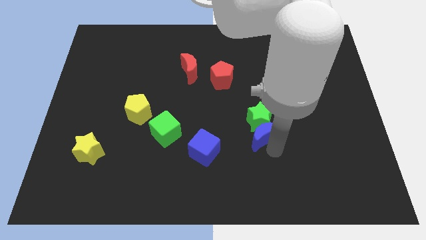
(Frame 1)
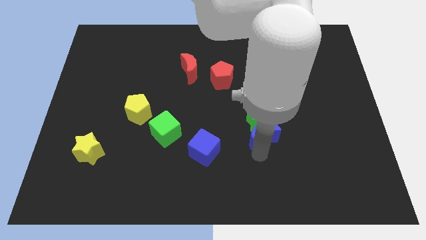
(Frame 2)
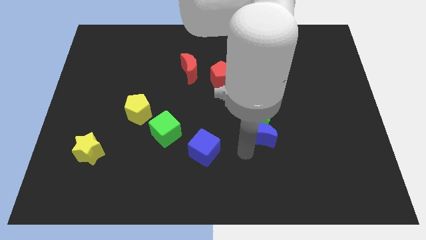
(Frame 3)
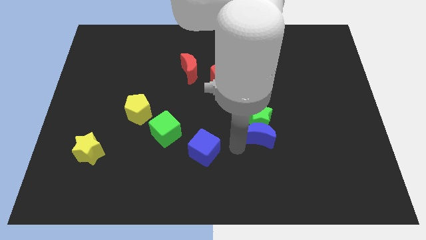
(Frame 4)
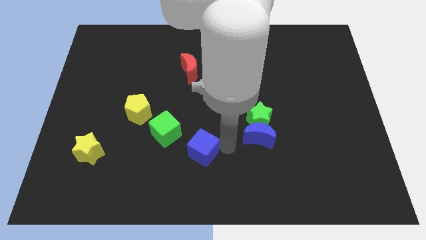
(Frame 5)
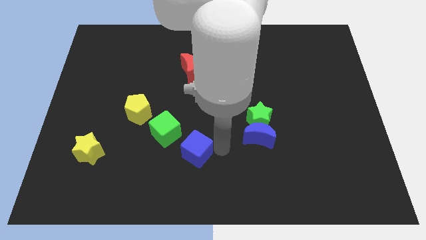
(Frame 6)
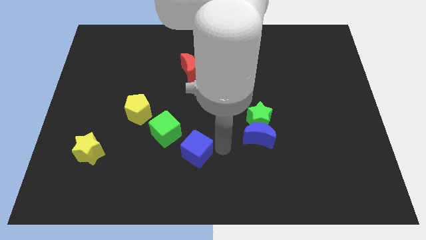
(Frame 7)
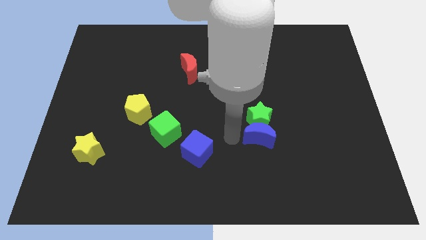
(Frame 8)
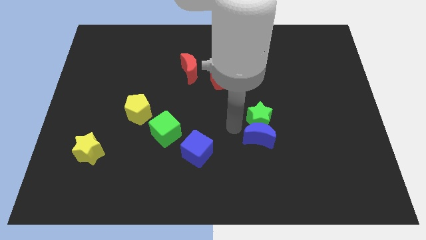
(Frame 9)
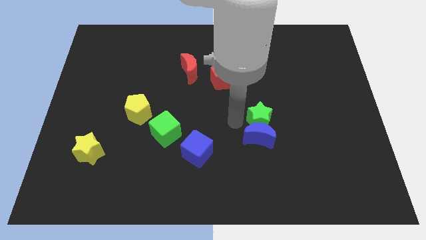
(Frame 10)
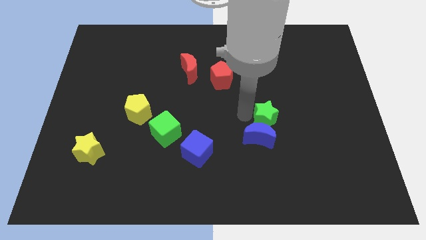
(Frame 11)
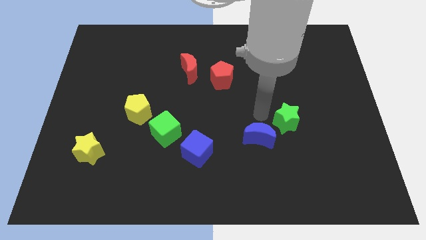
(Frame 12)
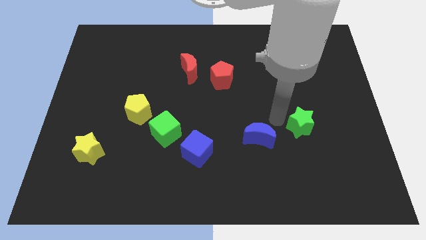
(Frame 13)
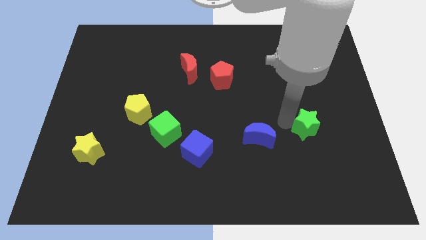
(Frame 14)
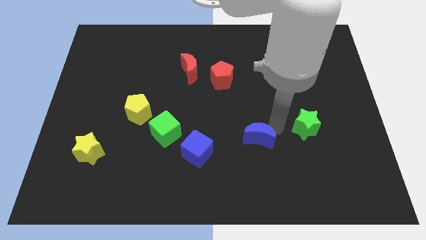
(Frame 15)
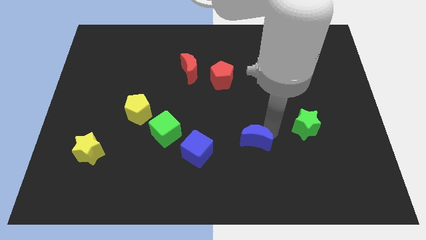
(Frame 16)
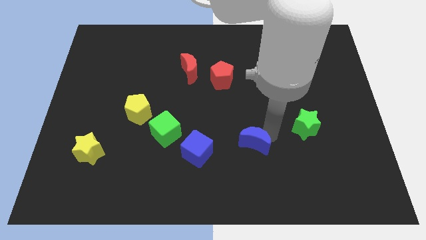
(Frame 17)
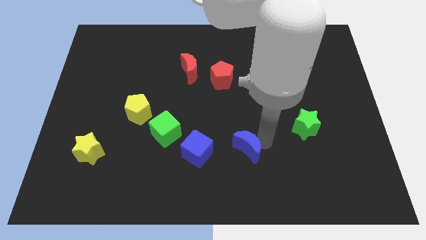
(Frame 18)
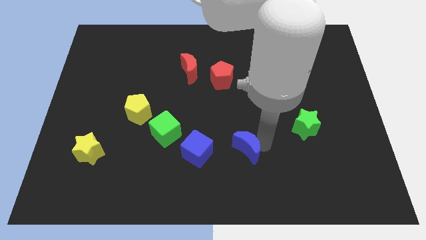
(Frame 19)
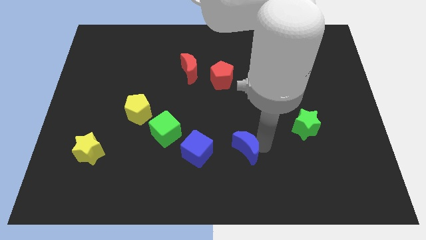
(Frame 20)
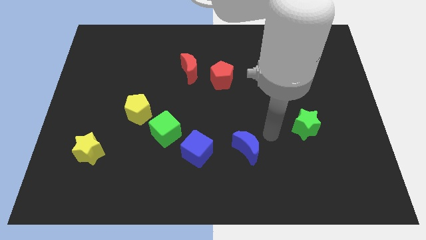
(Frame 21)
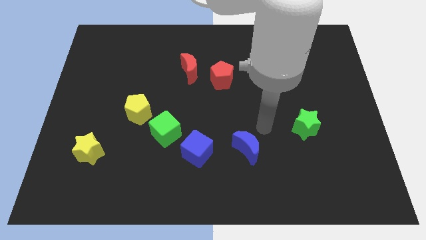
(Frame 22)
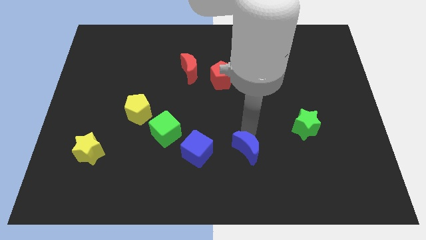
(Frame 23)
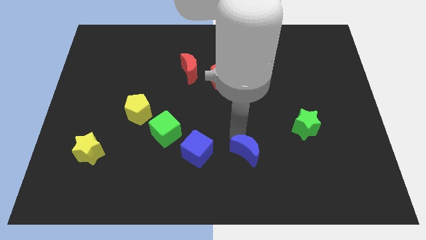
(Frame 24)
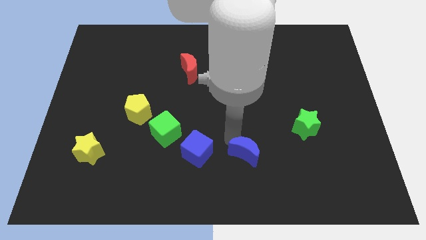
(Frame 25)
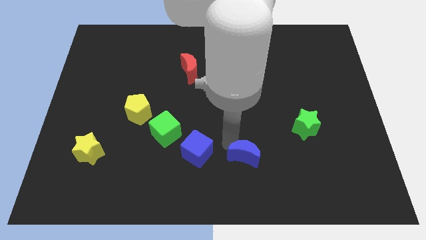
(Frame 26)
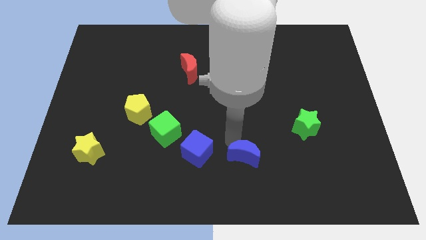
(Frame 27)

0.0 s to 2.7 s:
separate blue moon from green star

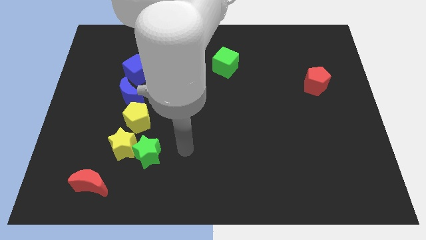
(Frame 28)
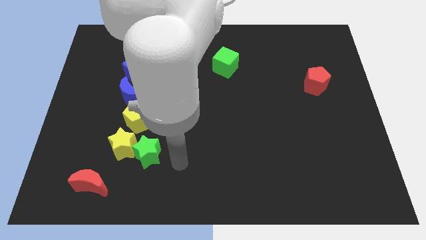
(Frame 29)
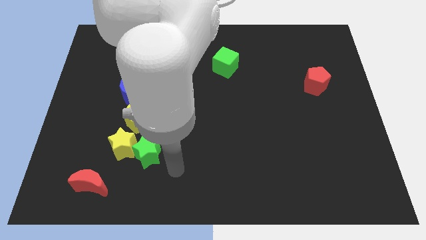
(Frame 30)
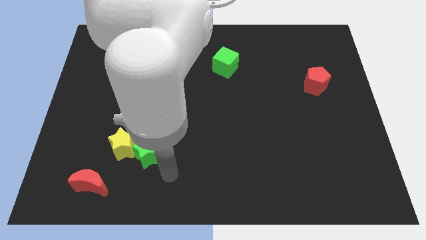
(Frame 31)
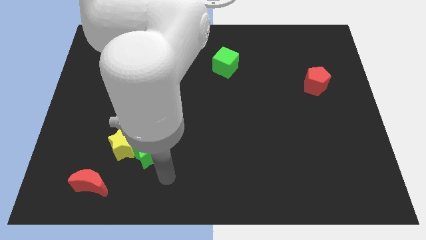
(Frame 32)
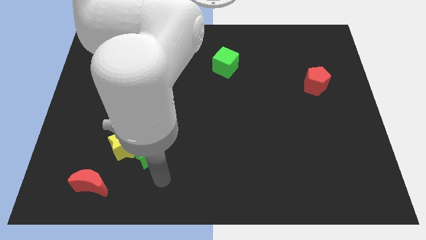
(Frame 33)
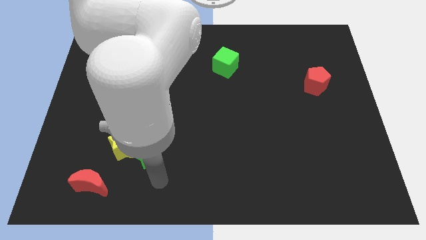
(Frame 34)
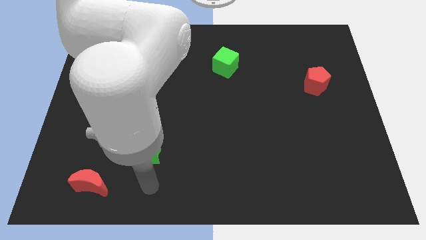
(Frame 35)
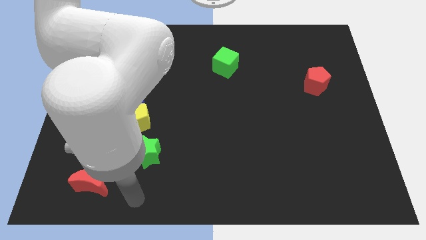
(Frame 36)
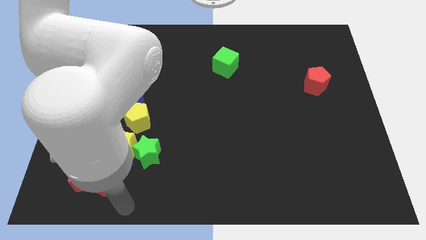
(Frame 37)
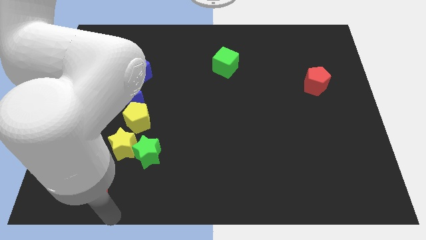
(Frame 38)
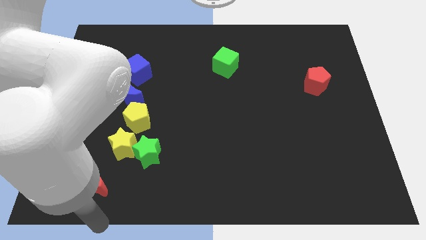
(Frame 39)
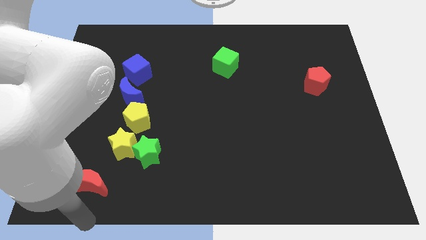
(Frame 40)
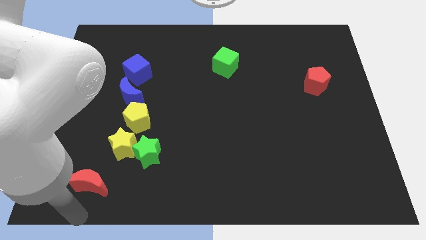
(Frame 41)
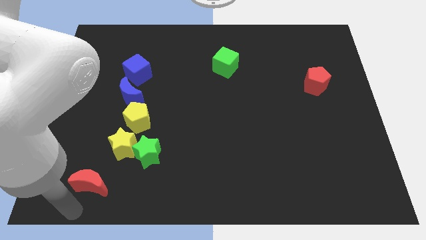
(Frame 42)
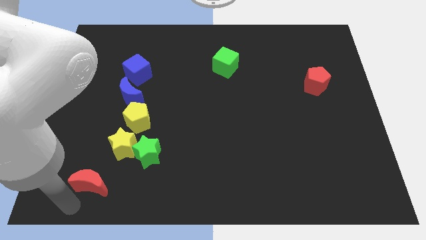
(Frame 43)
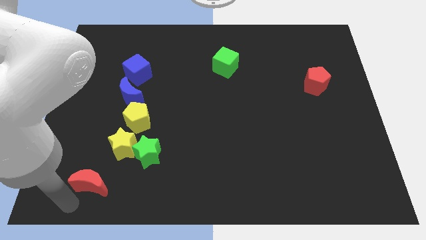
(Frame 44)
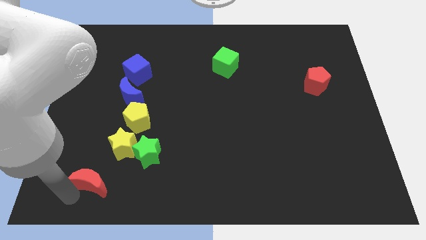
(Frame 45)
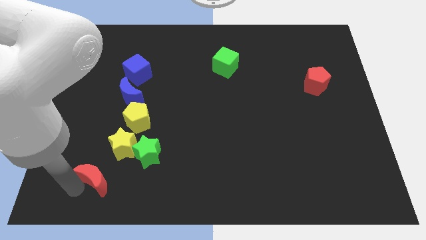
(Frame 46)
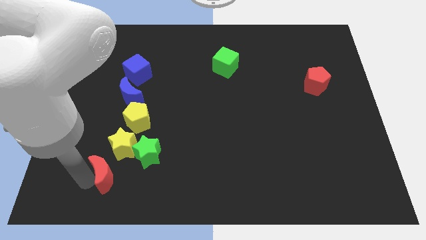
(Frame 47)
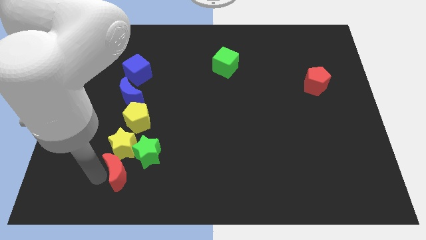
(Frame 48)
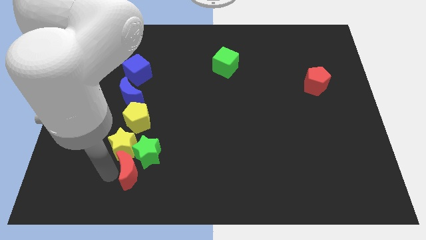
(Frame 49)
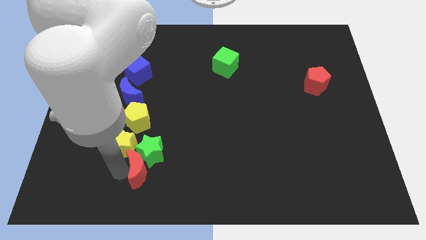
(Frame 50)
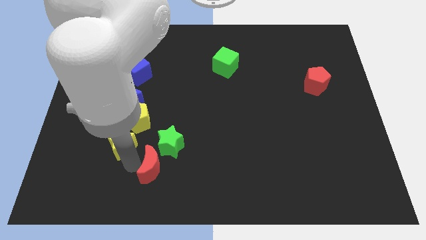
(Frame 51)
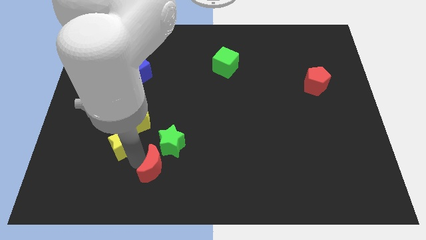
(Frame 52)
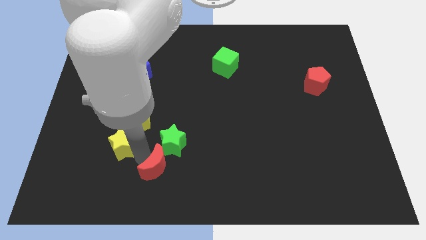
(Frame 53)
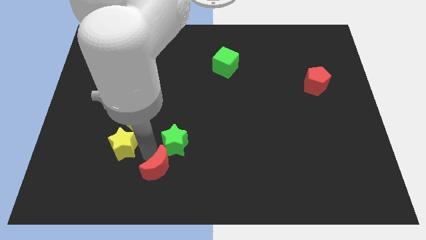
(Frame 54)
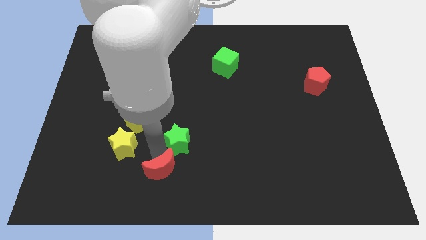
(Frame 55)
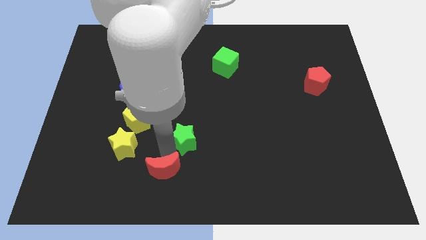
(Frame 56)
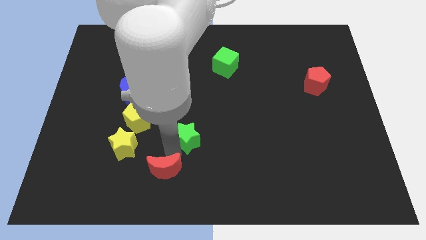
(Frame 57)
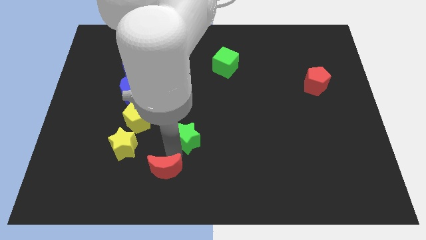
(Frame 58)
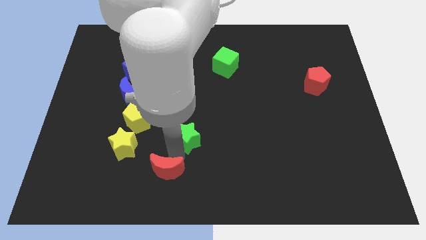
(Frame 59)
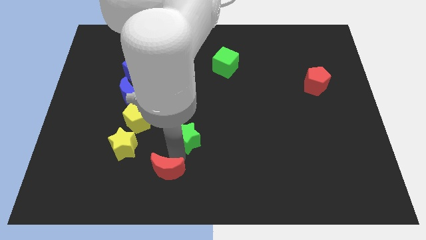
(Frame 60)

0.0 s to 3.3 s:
place your hand in between the green star and red moon

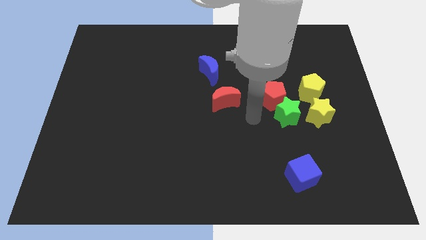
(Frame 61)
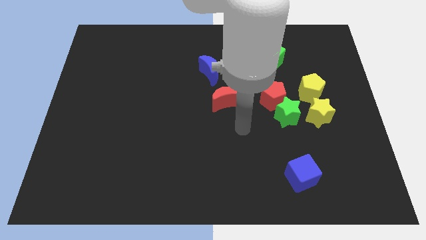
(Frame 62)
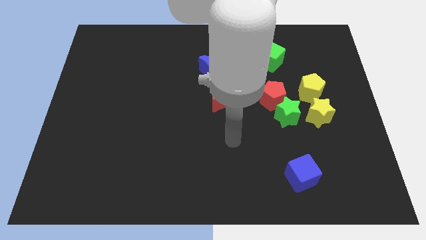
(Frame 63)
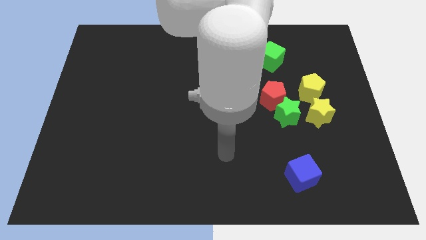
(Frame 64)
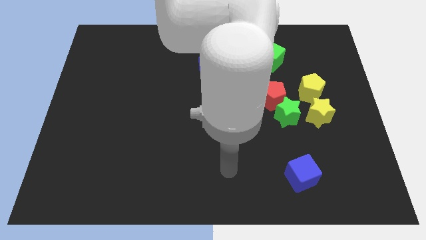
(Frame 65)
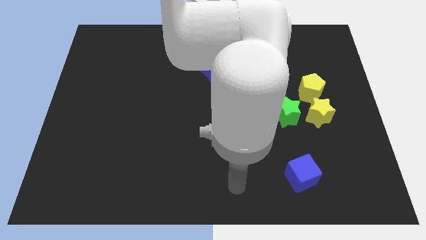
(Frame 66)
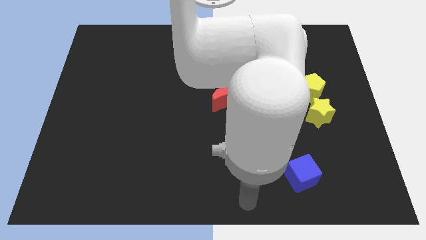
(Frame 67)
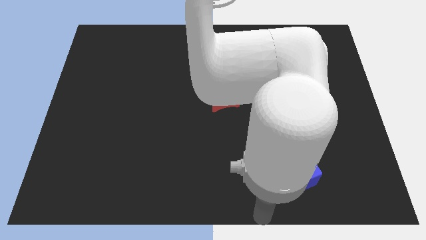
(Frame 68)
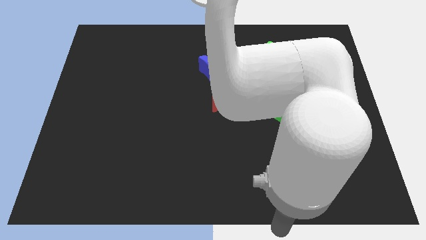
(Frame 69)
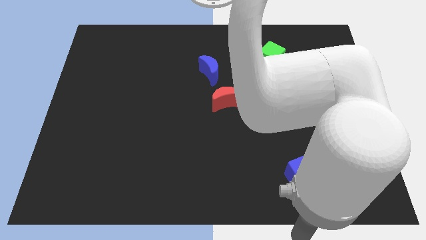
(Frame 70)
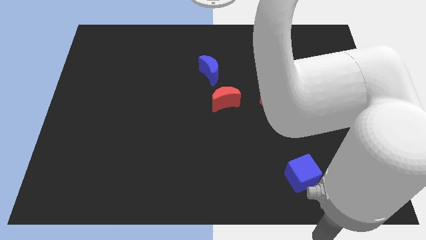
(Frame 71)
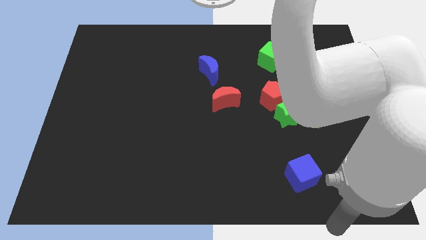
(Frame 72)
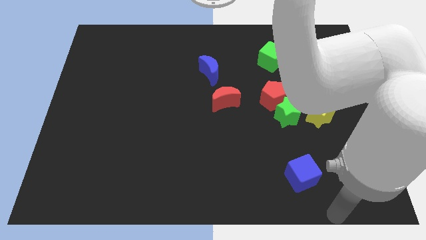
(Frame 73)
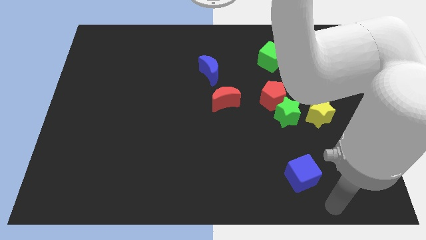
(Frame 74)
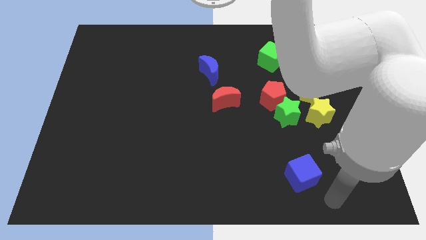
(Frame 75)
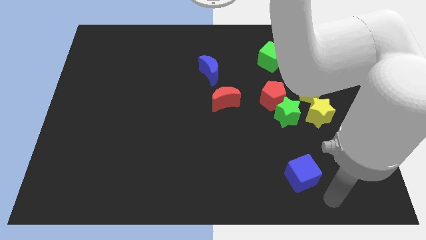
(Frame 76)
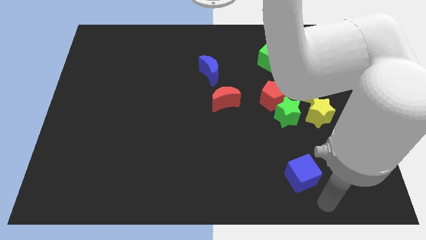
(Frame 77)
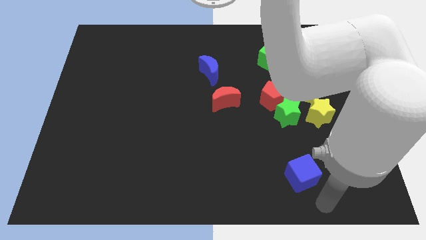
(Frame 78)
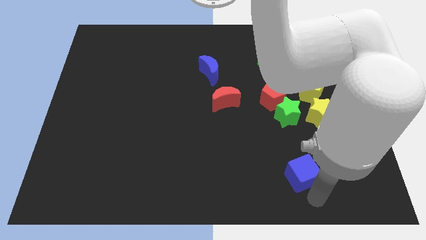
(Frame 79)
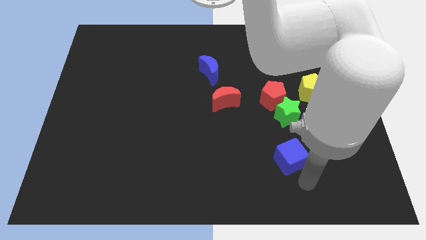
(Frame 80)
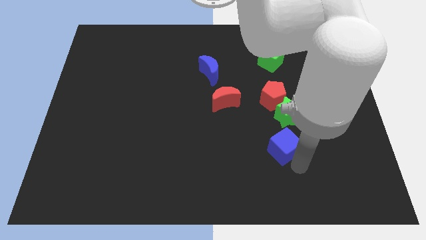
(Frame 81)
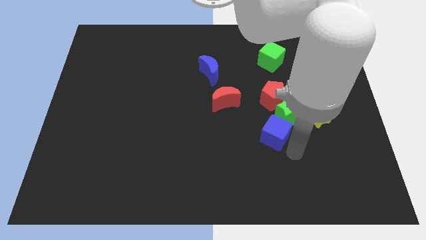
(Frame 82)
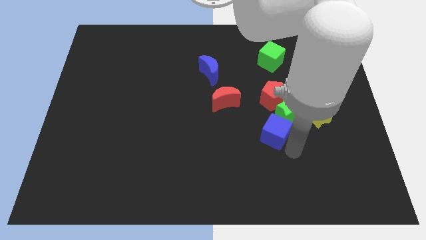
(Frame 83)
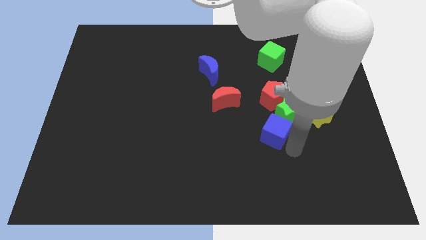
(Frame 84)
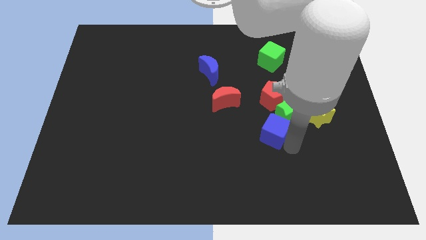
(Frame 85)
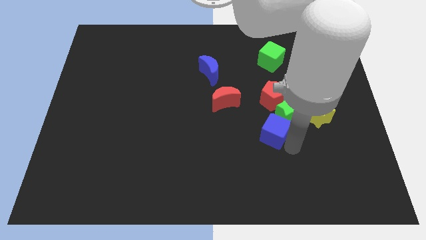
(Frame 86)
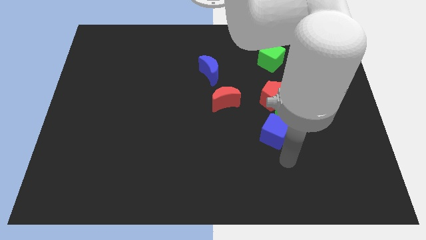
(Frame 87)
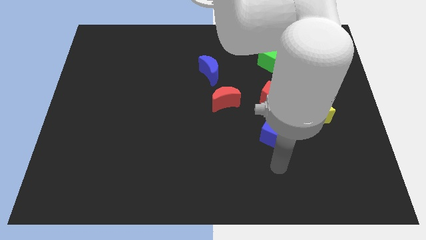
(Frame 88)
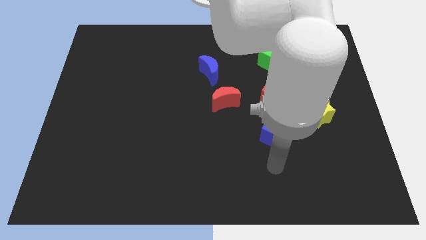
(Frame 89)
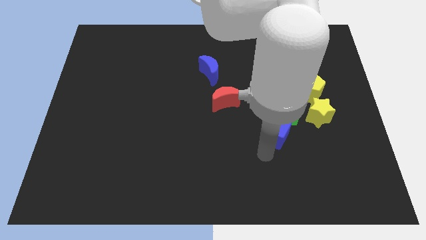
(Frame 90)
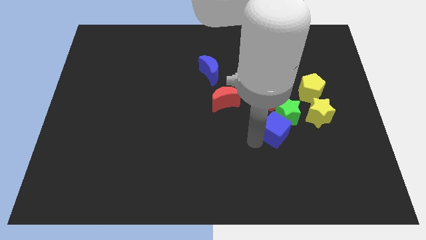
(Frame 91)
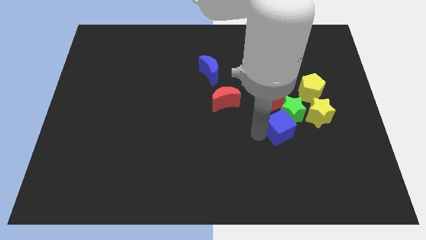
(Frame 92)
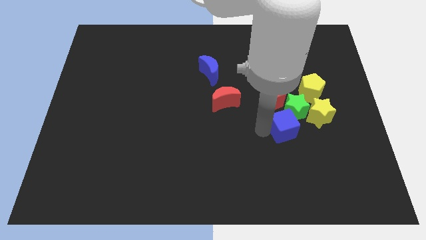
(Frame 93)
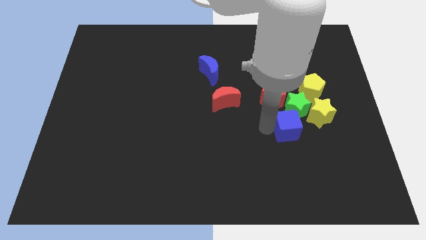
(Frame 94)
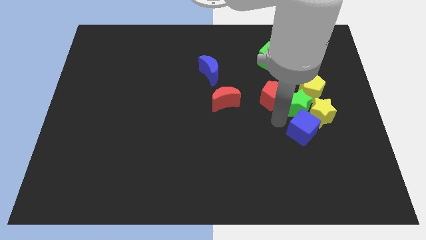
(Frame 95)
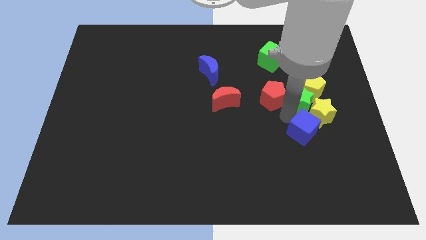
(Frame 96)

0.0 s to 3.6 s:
push the blue cube to the group of blocks
